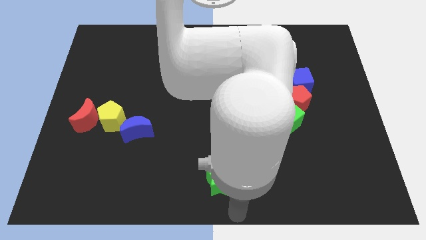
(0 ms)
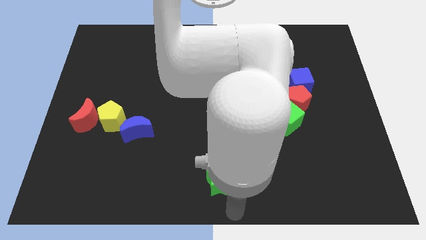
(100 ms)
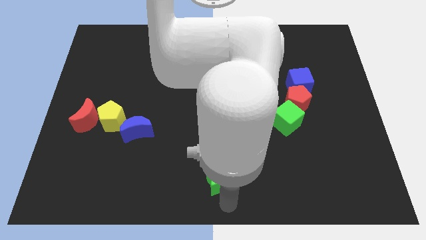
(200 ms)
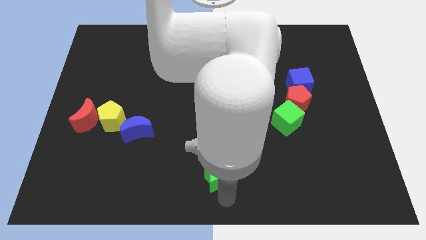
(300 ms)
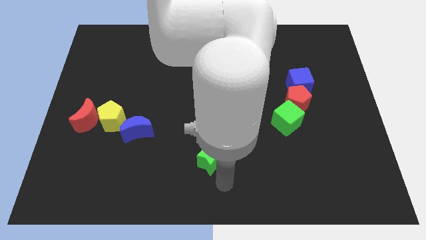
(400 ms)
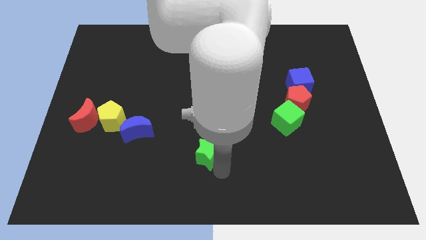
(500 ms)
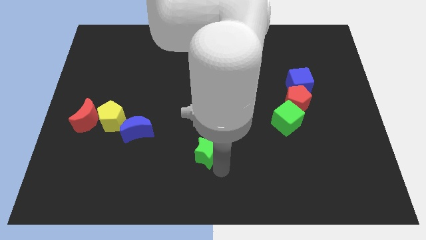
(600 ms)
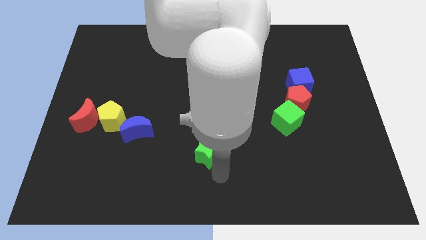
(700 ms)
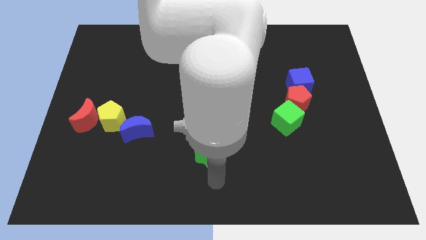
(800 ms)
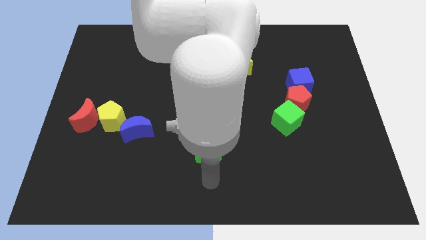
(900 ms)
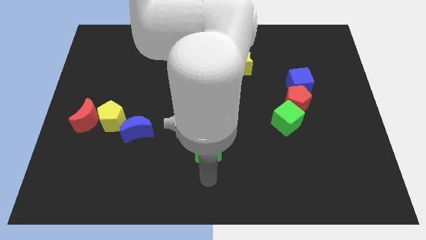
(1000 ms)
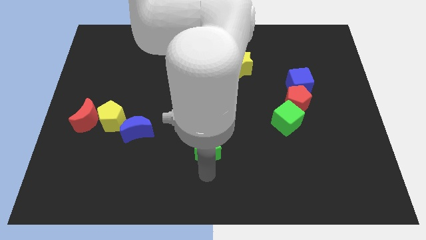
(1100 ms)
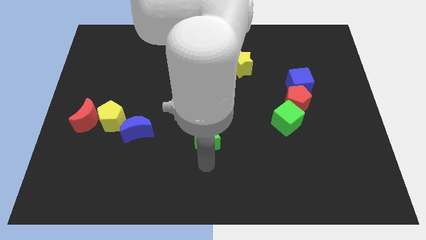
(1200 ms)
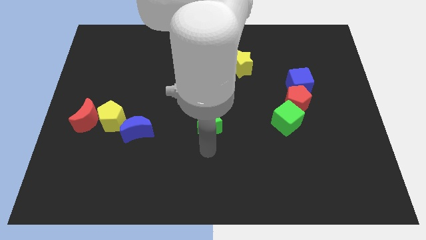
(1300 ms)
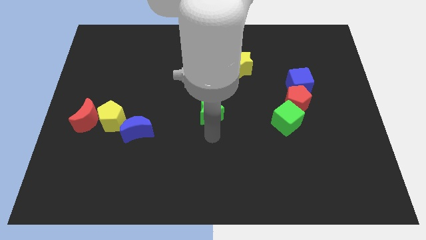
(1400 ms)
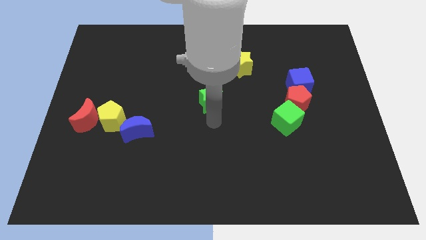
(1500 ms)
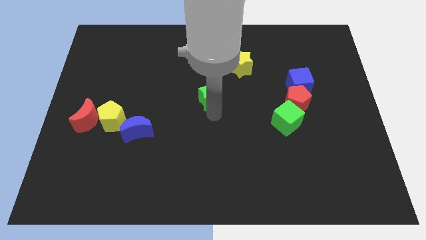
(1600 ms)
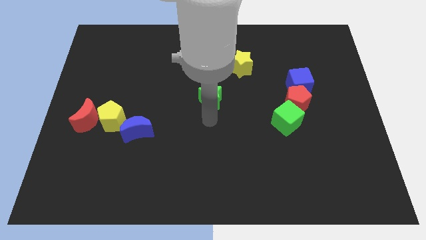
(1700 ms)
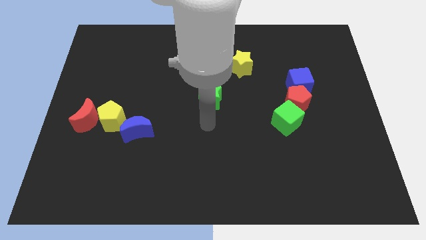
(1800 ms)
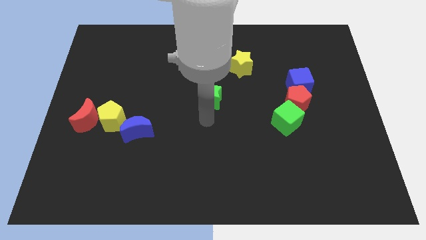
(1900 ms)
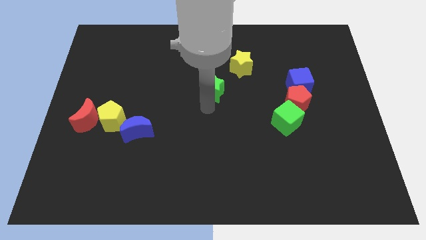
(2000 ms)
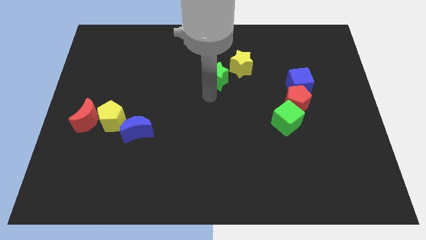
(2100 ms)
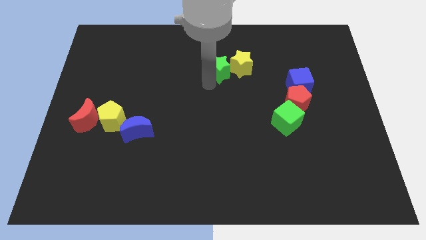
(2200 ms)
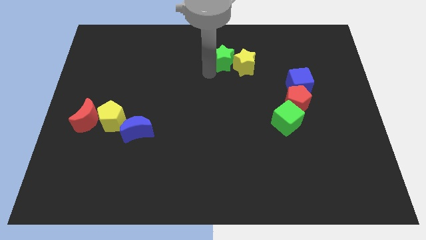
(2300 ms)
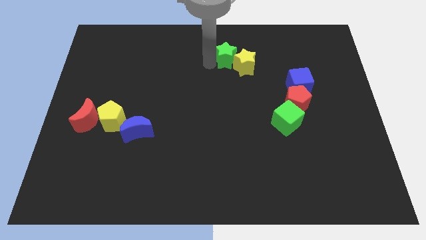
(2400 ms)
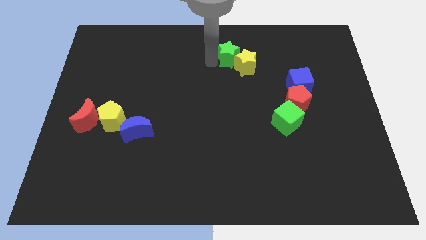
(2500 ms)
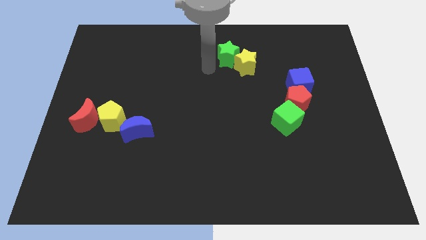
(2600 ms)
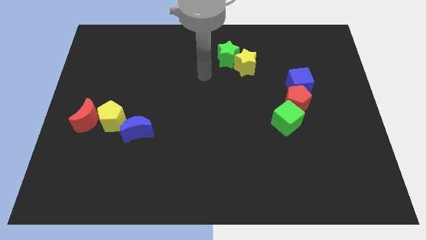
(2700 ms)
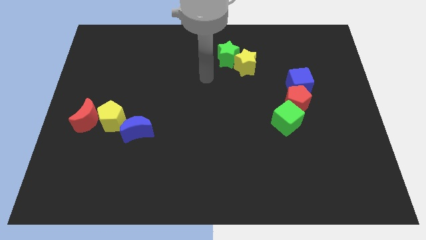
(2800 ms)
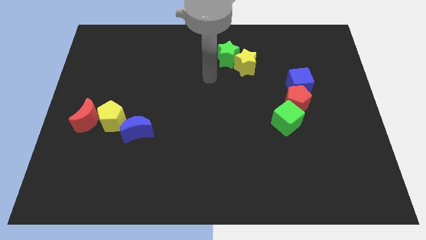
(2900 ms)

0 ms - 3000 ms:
slide the green star to the top left of the yellow star

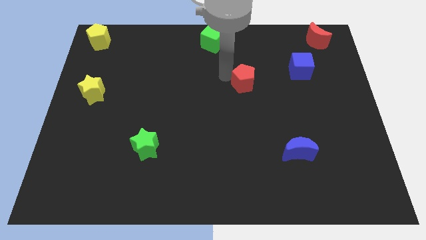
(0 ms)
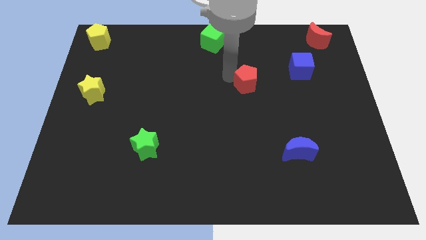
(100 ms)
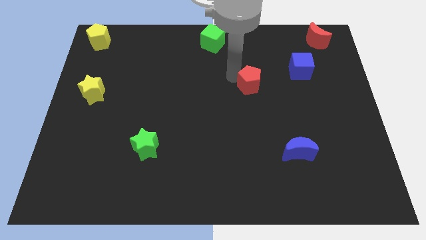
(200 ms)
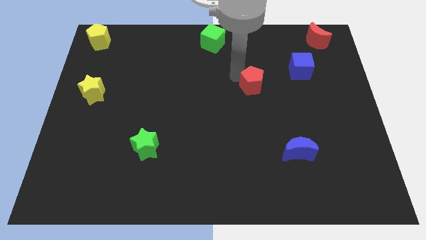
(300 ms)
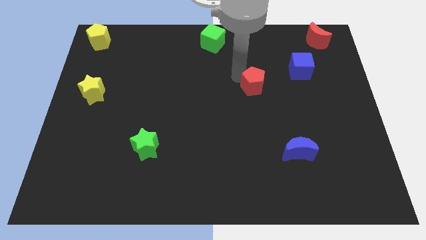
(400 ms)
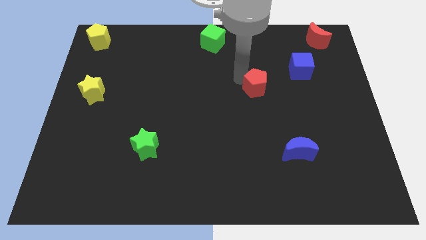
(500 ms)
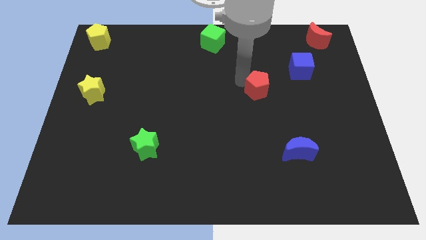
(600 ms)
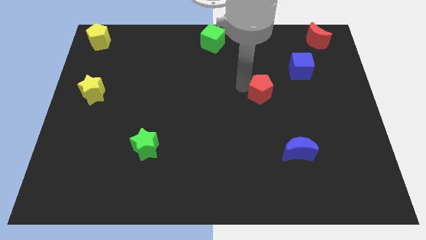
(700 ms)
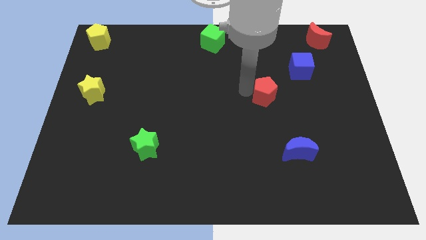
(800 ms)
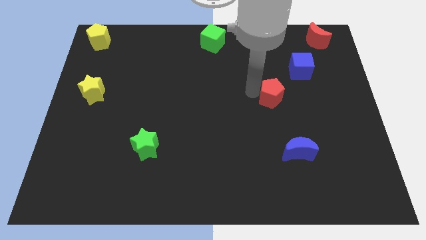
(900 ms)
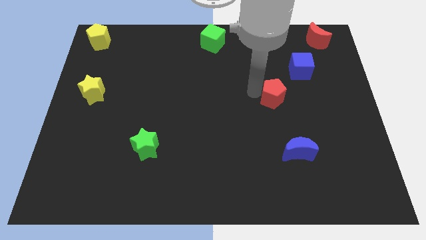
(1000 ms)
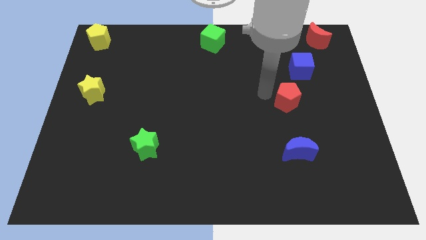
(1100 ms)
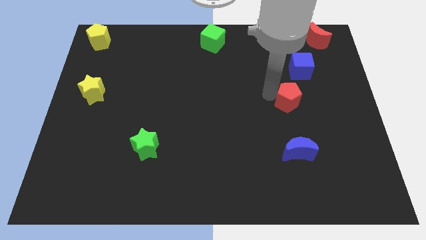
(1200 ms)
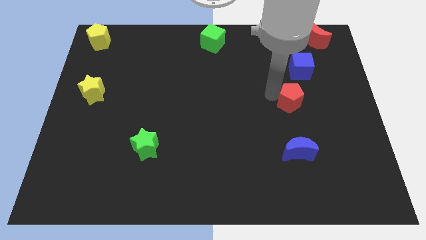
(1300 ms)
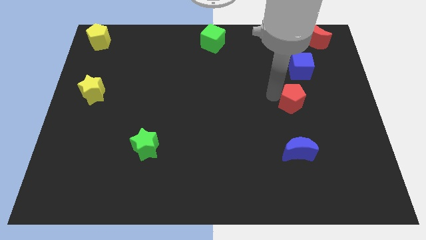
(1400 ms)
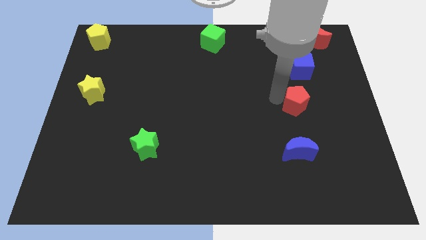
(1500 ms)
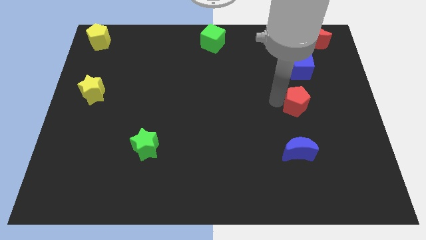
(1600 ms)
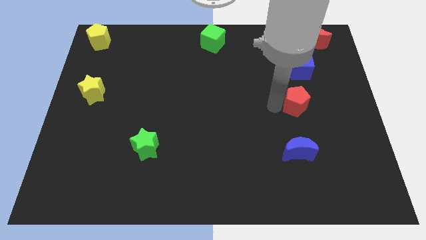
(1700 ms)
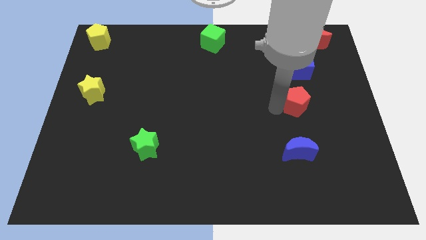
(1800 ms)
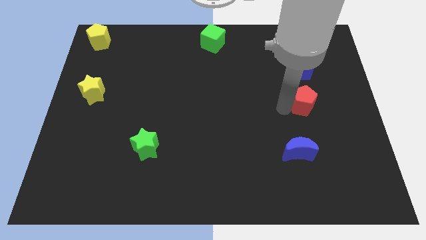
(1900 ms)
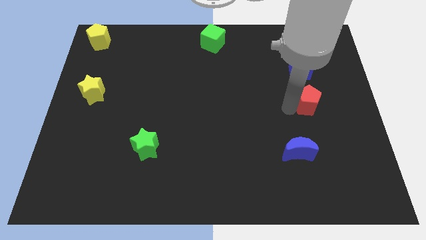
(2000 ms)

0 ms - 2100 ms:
place the red pentagon under the blue cube

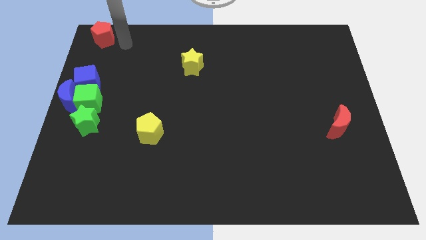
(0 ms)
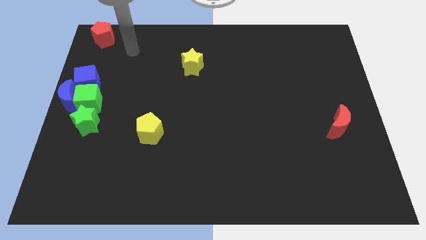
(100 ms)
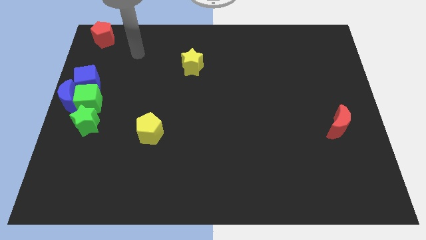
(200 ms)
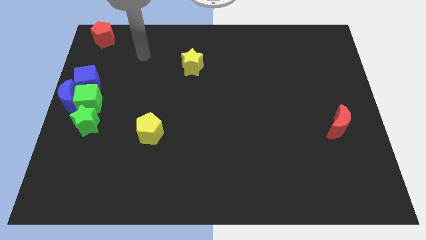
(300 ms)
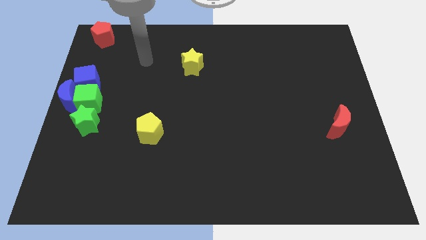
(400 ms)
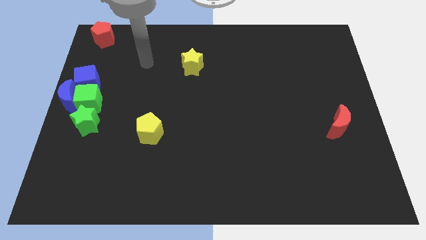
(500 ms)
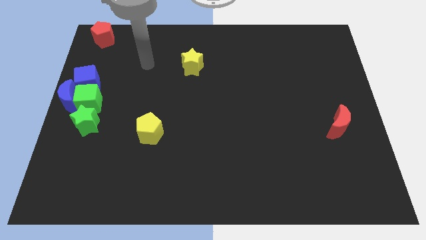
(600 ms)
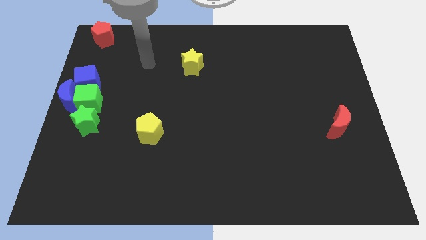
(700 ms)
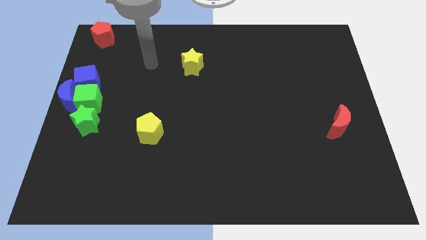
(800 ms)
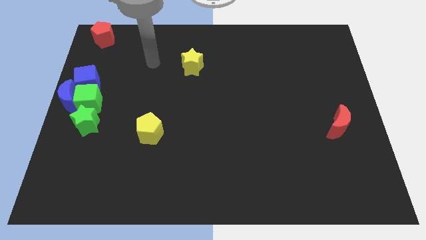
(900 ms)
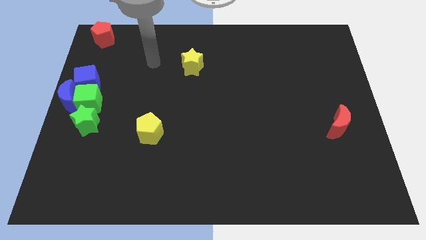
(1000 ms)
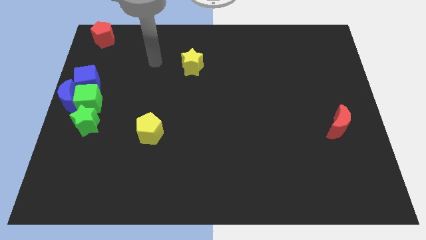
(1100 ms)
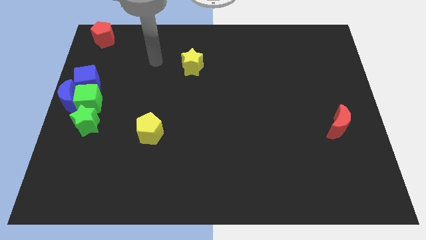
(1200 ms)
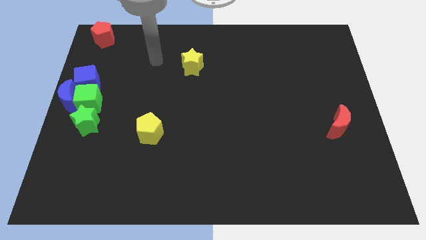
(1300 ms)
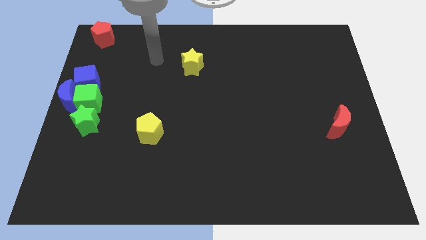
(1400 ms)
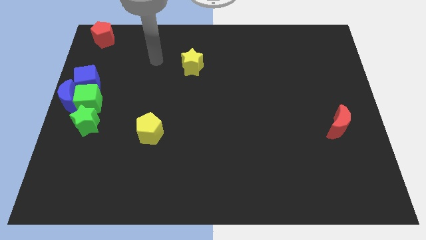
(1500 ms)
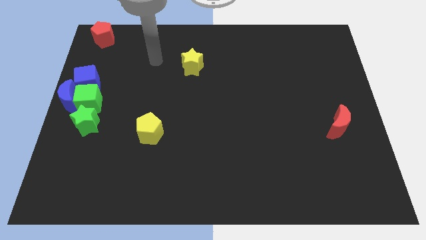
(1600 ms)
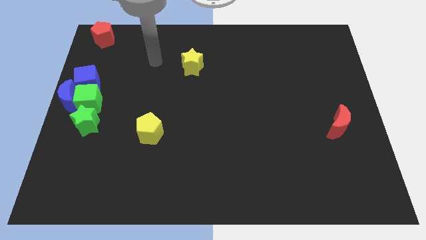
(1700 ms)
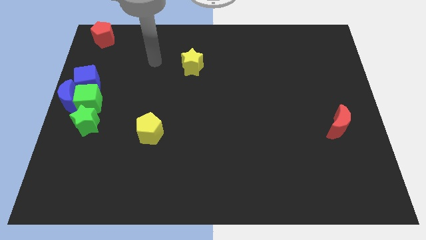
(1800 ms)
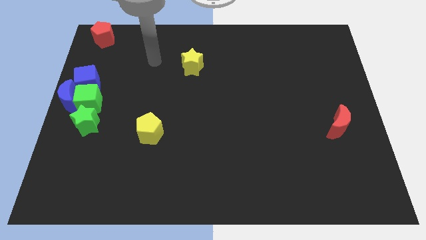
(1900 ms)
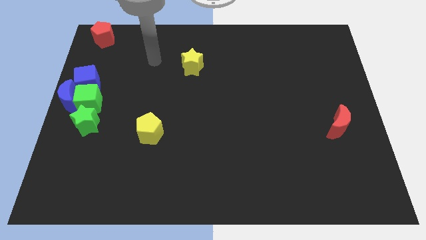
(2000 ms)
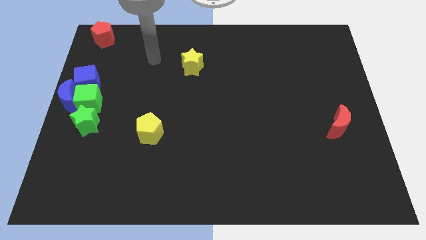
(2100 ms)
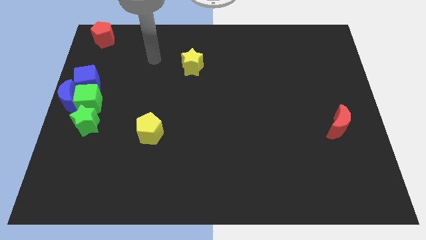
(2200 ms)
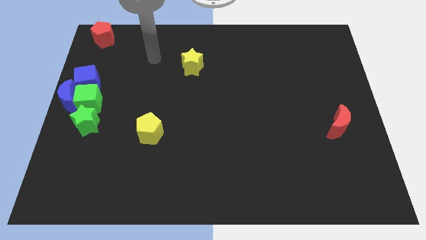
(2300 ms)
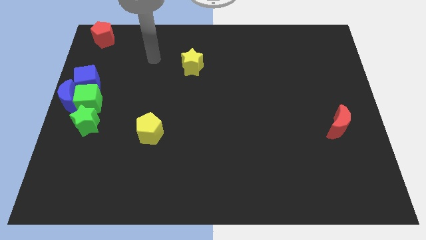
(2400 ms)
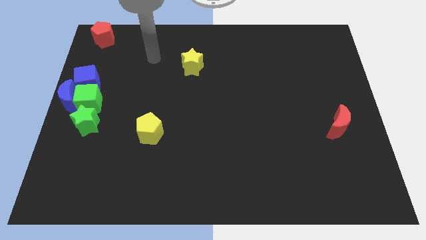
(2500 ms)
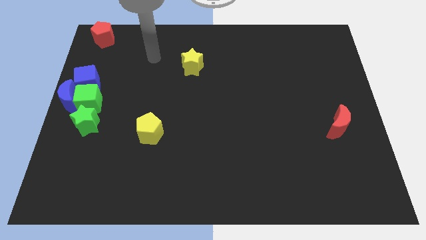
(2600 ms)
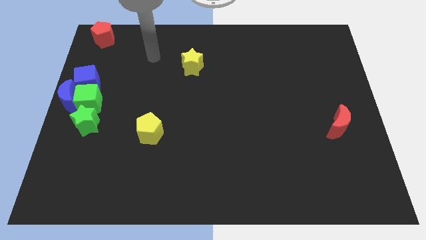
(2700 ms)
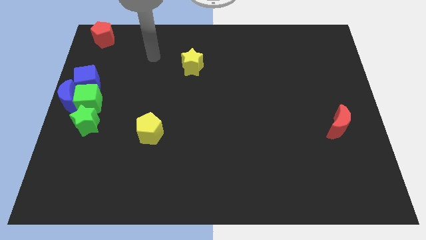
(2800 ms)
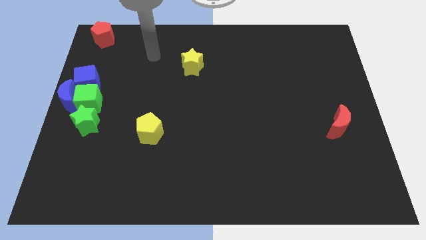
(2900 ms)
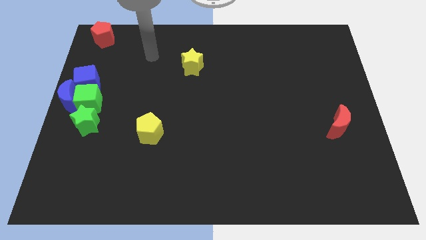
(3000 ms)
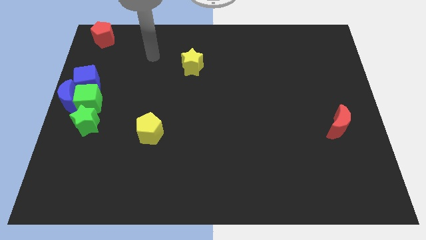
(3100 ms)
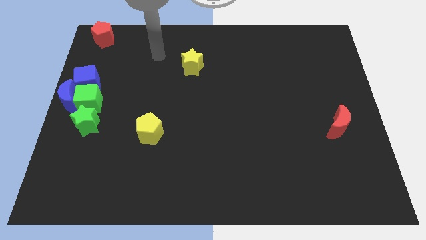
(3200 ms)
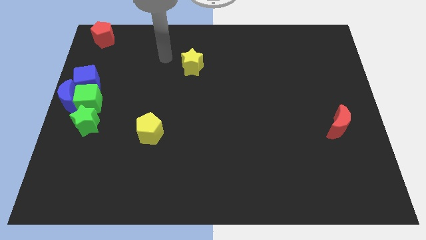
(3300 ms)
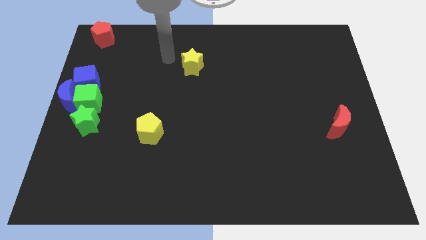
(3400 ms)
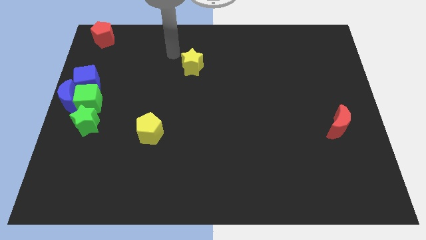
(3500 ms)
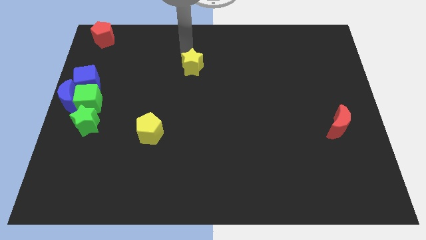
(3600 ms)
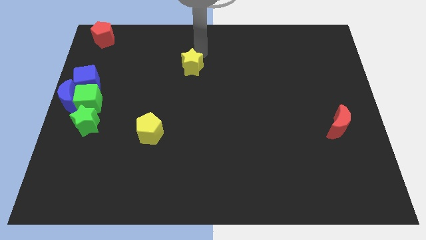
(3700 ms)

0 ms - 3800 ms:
place your arm at the top of yellow star
